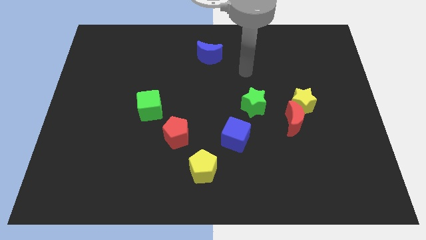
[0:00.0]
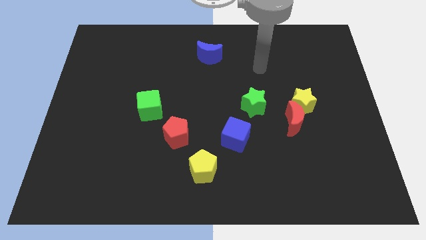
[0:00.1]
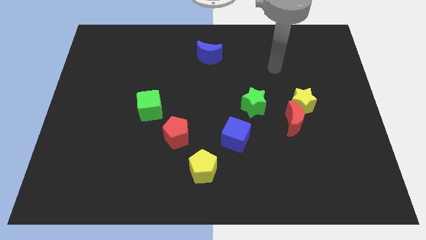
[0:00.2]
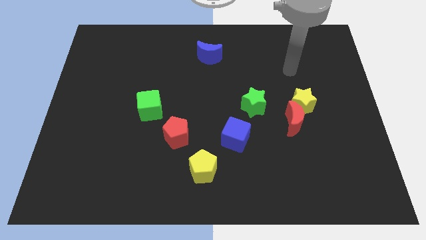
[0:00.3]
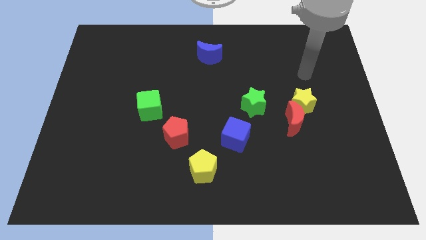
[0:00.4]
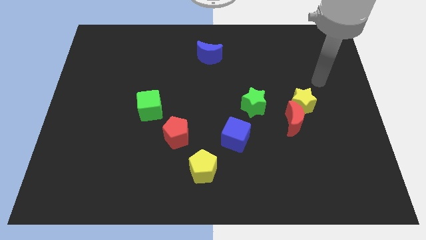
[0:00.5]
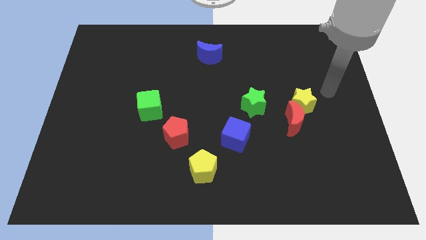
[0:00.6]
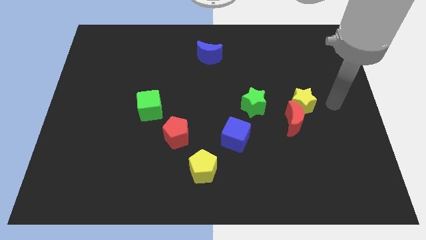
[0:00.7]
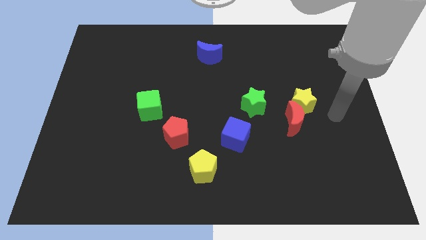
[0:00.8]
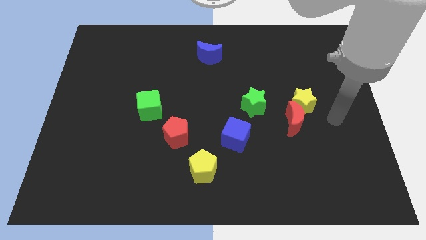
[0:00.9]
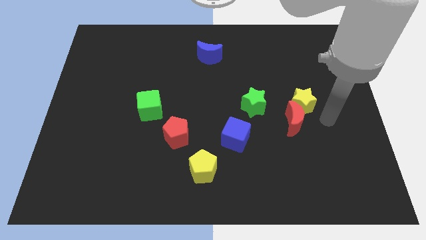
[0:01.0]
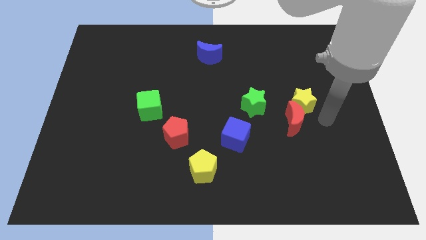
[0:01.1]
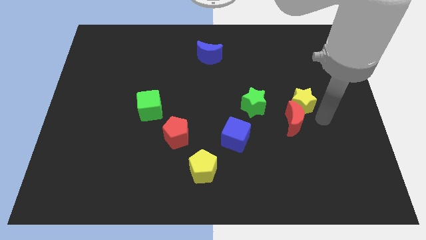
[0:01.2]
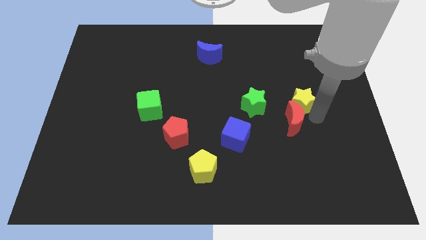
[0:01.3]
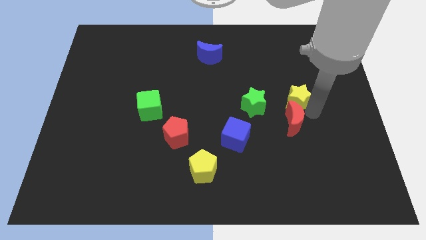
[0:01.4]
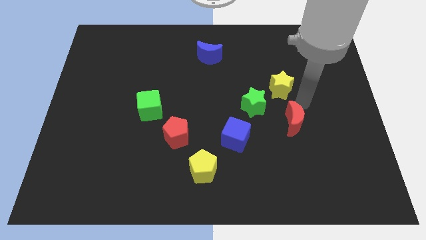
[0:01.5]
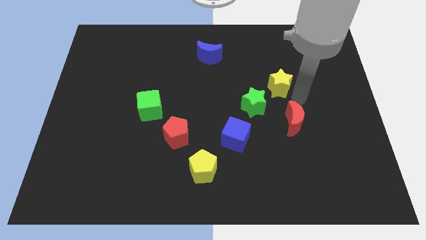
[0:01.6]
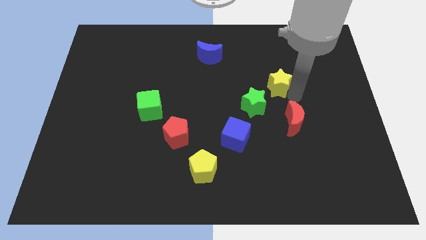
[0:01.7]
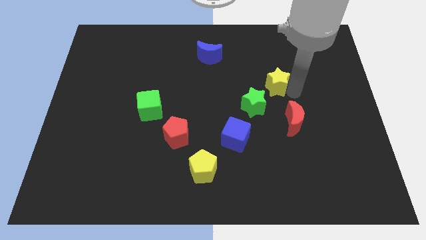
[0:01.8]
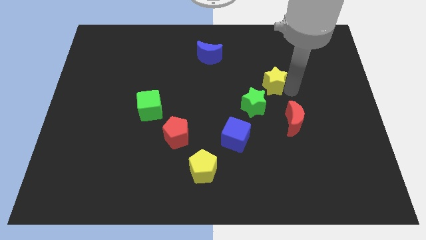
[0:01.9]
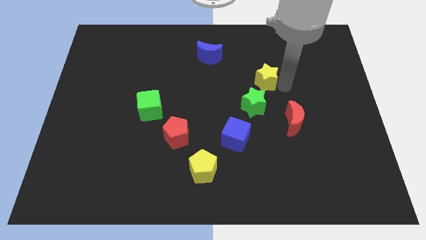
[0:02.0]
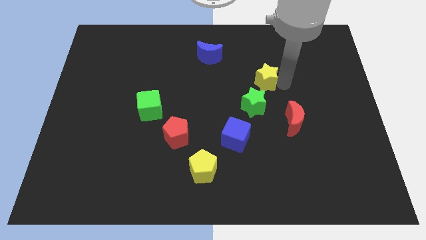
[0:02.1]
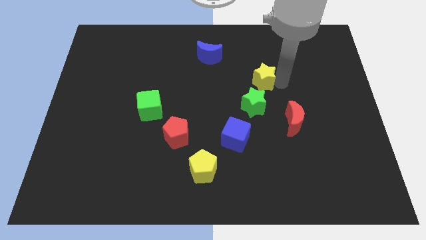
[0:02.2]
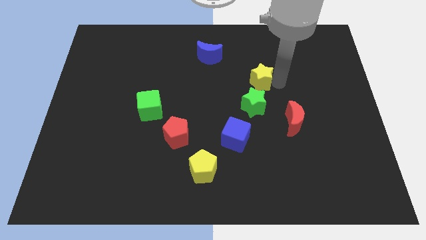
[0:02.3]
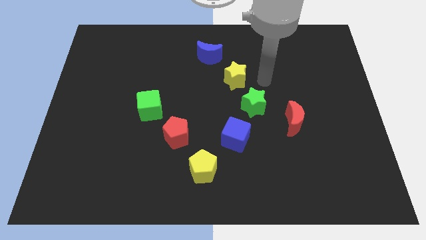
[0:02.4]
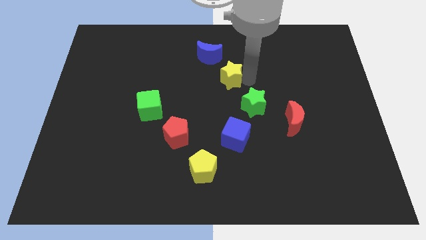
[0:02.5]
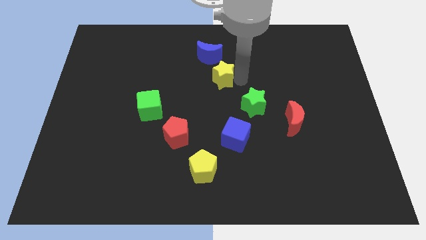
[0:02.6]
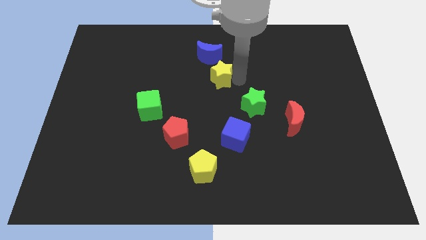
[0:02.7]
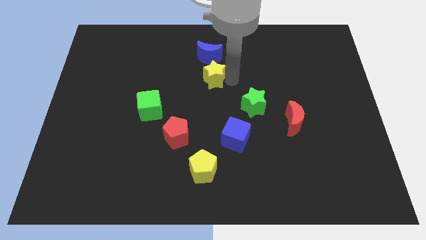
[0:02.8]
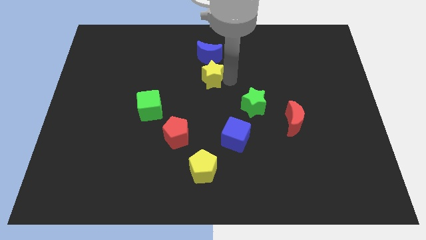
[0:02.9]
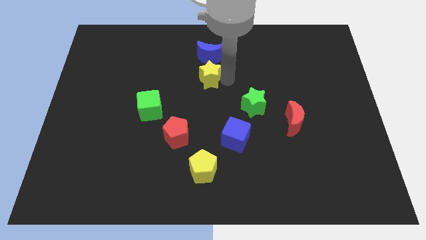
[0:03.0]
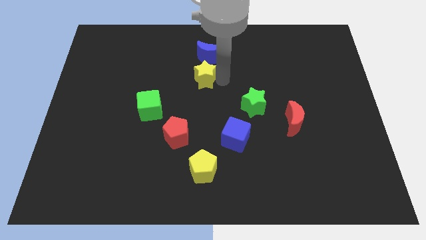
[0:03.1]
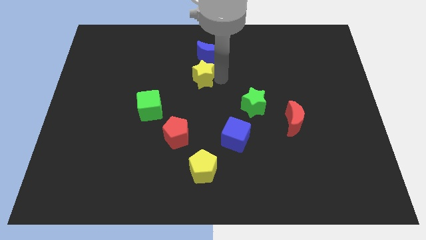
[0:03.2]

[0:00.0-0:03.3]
move the yellow star towards the left side below blue moon

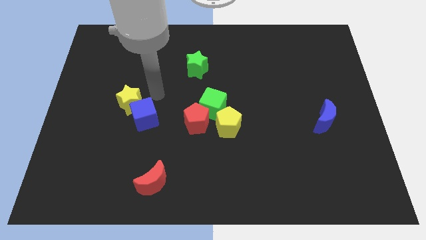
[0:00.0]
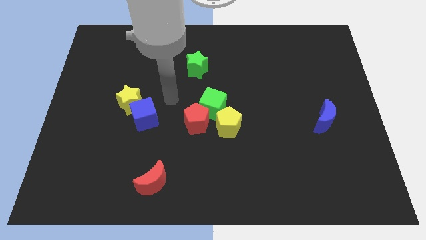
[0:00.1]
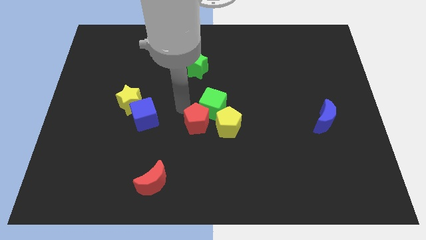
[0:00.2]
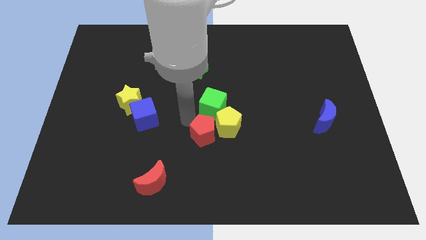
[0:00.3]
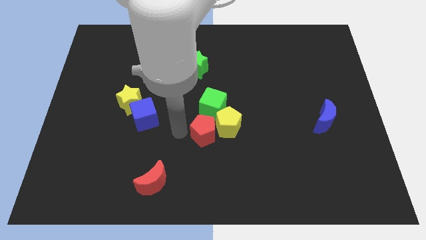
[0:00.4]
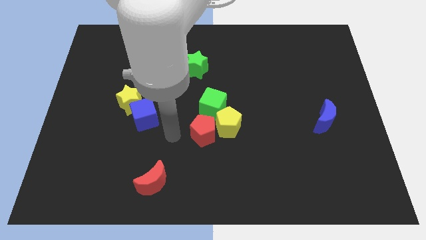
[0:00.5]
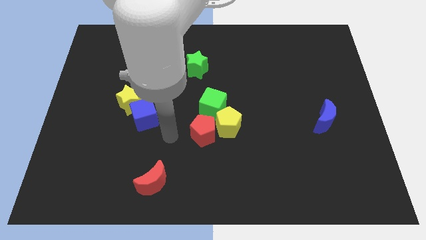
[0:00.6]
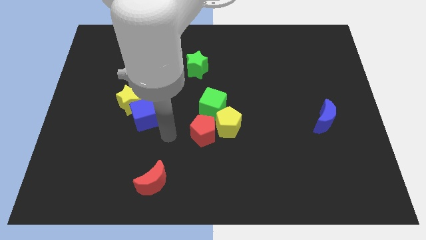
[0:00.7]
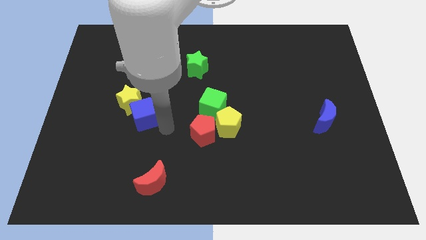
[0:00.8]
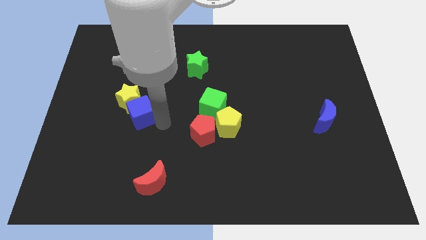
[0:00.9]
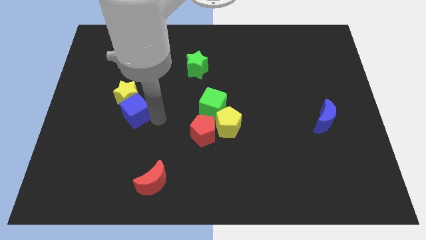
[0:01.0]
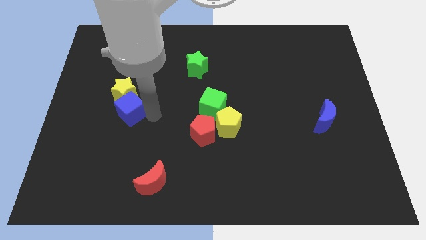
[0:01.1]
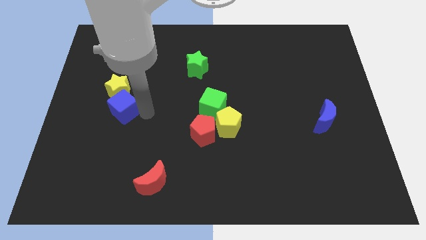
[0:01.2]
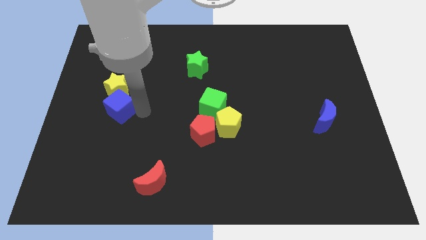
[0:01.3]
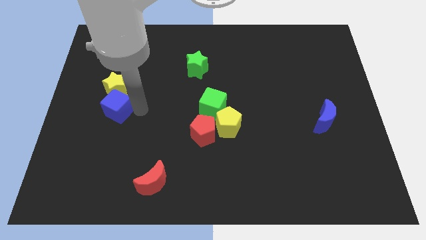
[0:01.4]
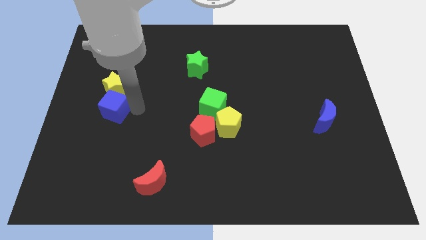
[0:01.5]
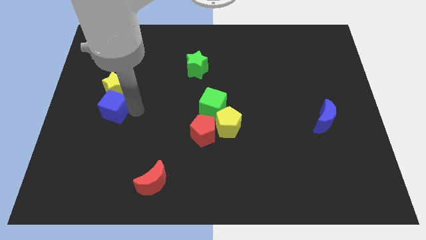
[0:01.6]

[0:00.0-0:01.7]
push blue moon along with yellow star to the left side

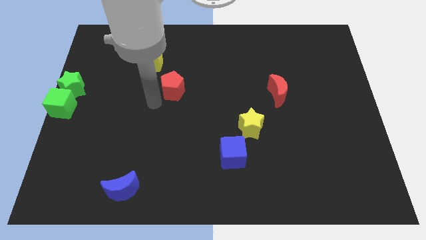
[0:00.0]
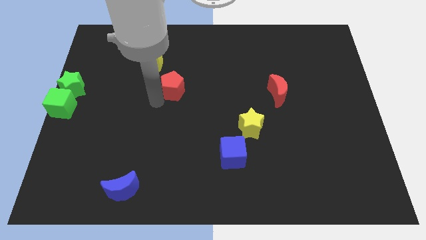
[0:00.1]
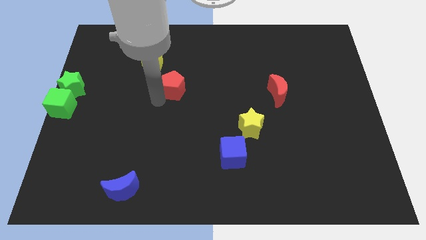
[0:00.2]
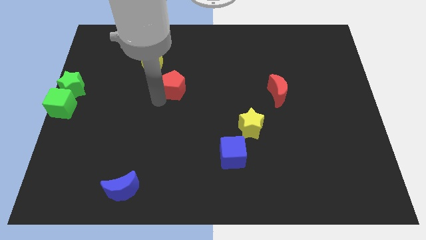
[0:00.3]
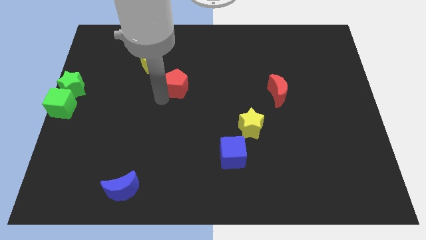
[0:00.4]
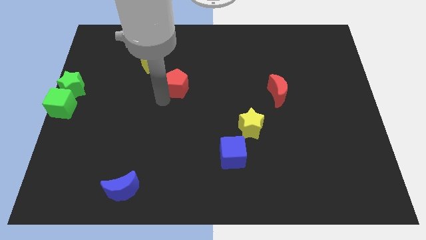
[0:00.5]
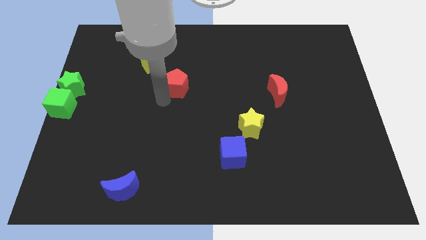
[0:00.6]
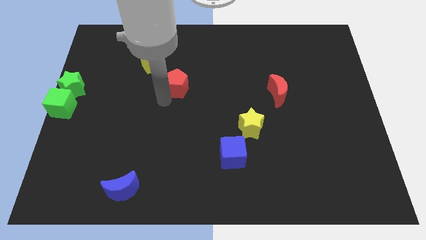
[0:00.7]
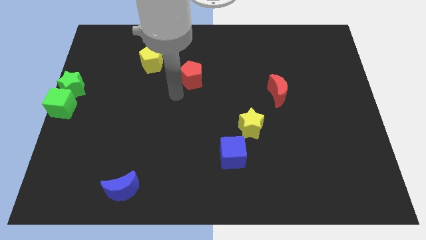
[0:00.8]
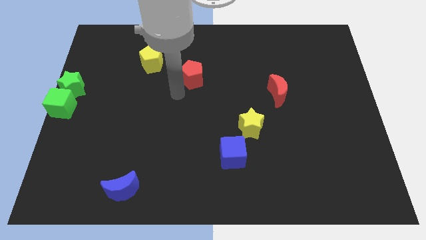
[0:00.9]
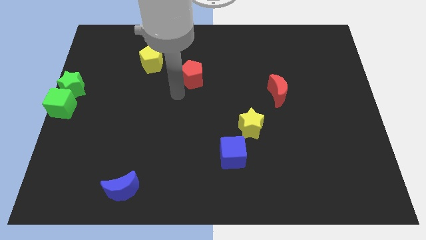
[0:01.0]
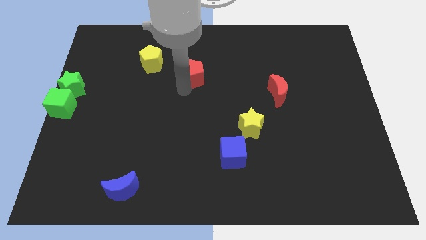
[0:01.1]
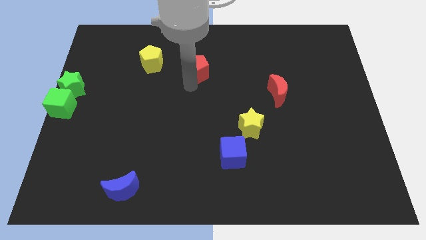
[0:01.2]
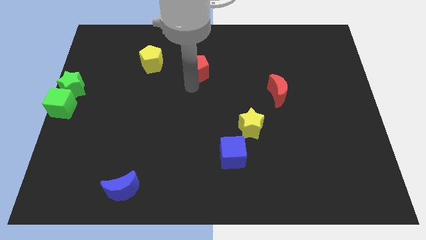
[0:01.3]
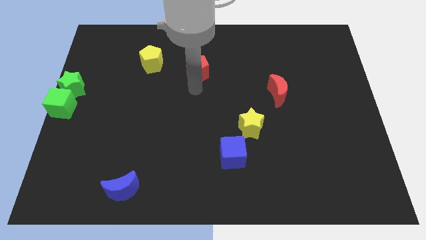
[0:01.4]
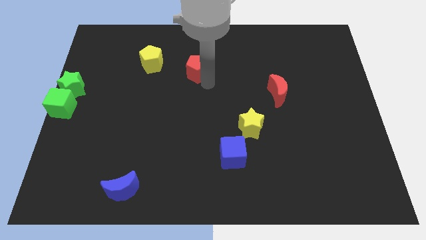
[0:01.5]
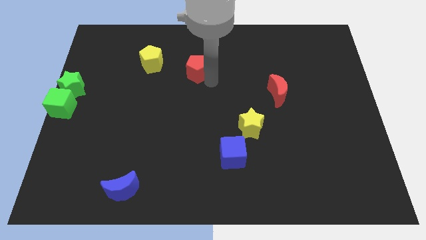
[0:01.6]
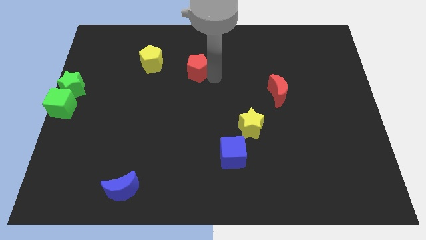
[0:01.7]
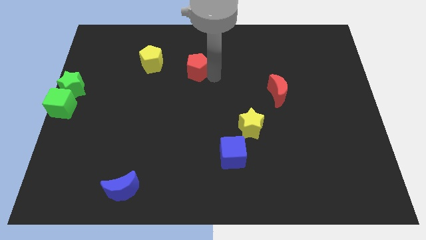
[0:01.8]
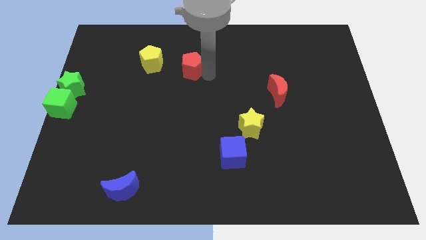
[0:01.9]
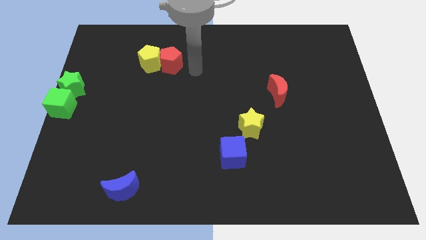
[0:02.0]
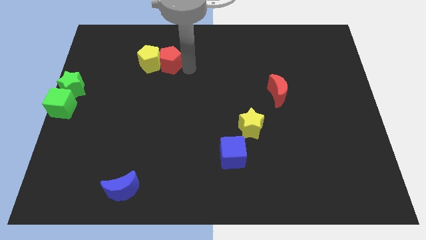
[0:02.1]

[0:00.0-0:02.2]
place the red pentagon into the right of the yellow pentagon

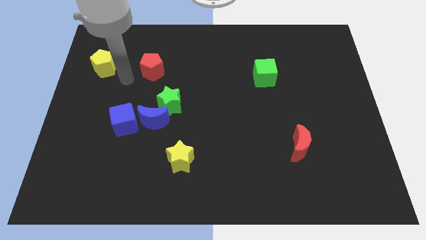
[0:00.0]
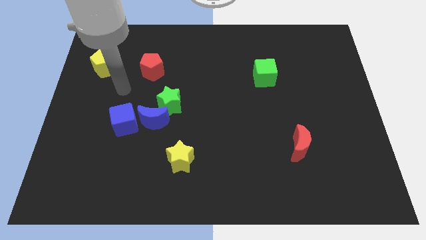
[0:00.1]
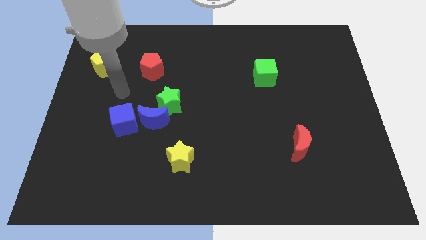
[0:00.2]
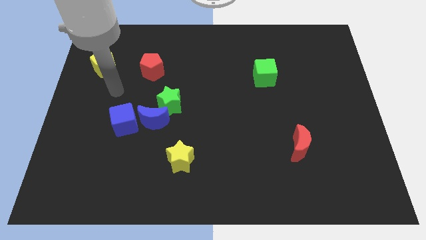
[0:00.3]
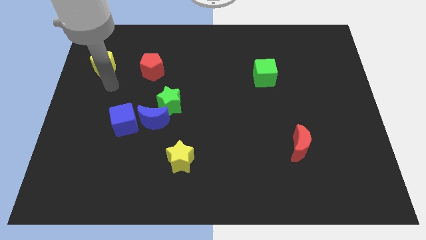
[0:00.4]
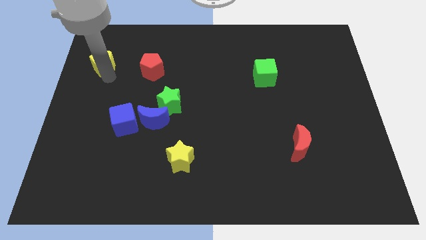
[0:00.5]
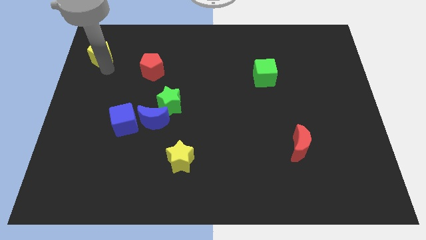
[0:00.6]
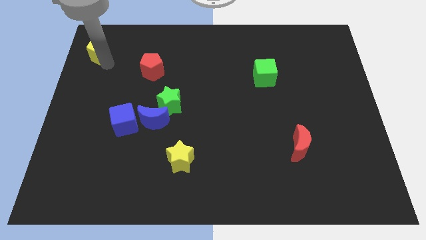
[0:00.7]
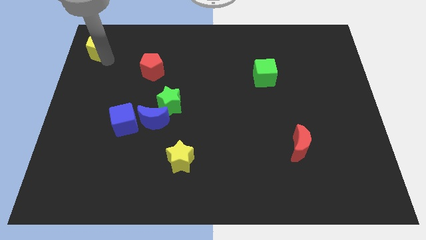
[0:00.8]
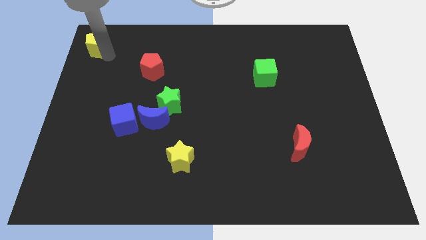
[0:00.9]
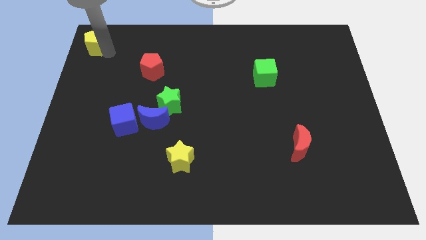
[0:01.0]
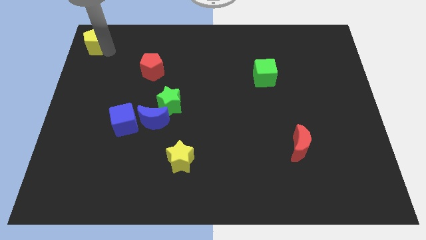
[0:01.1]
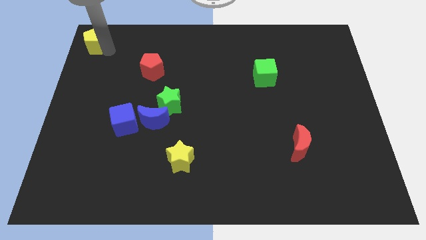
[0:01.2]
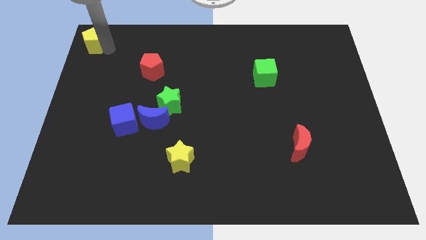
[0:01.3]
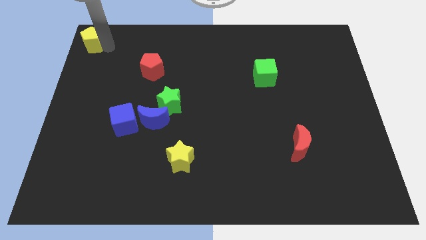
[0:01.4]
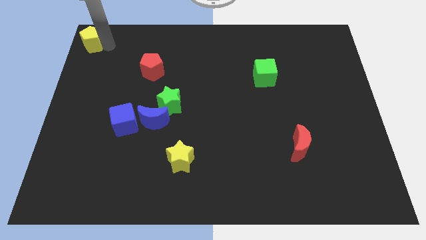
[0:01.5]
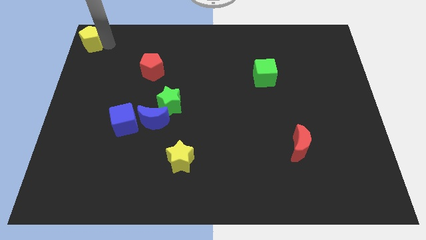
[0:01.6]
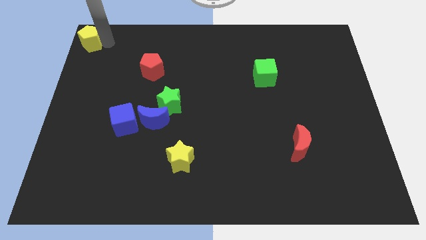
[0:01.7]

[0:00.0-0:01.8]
move the yellow pentagon to the top left corner
